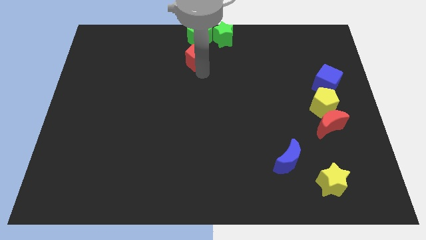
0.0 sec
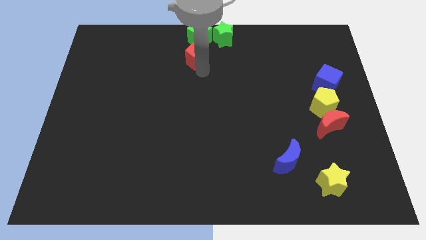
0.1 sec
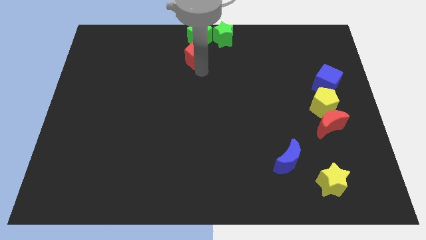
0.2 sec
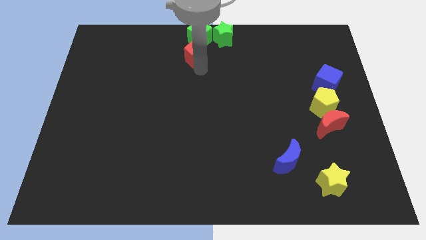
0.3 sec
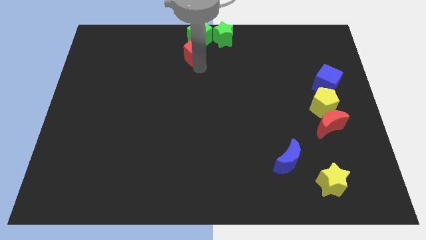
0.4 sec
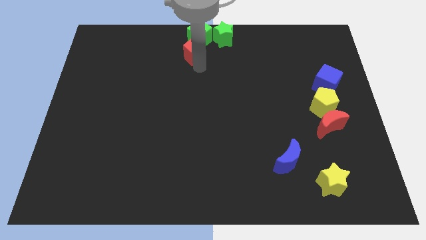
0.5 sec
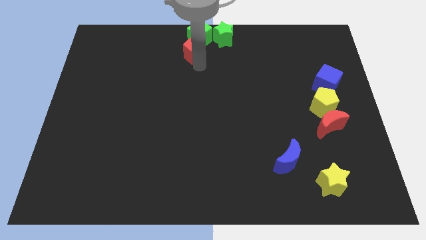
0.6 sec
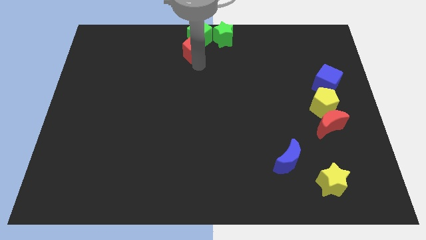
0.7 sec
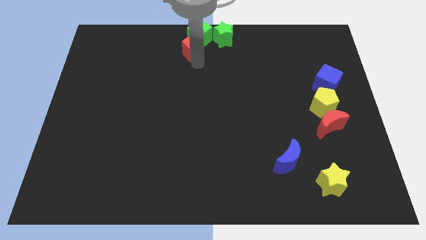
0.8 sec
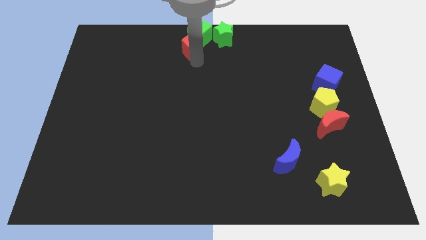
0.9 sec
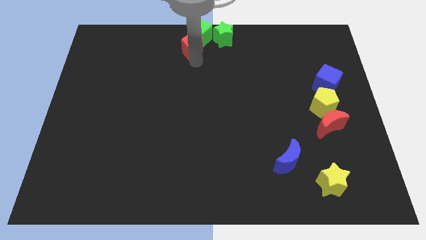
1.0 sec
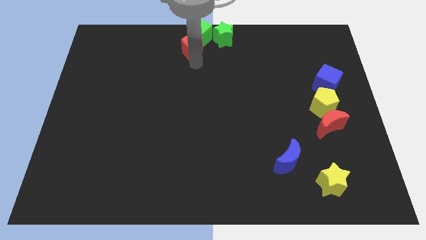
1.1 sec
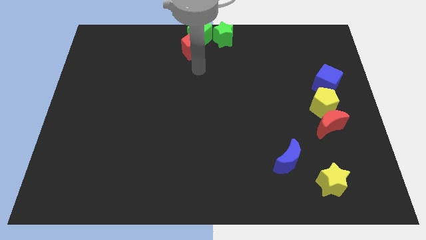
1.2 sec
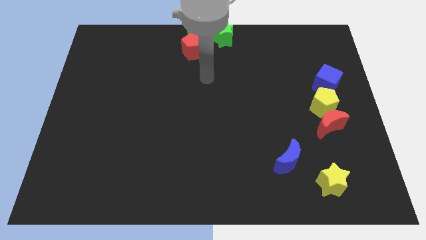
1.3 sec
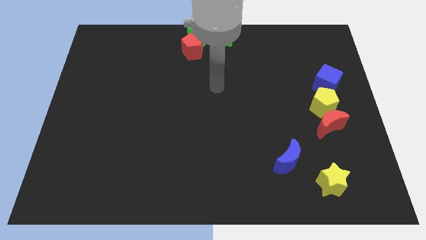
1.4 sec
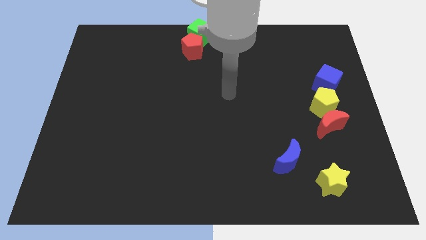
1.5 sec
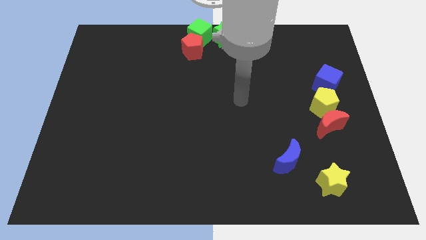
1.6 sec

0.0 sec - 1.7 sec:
place red pentagon below the green cube

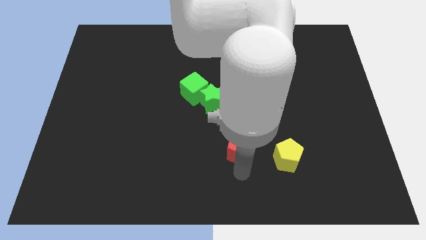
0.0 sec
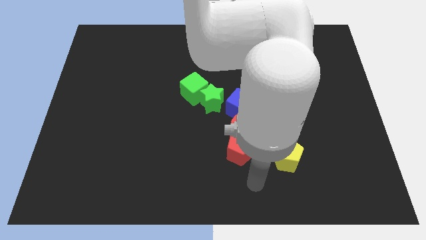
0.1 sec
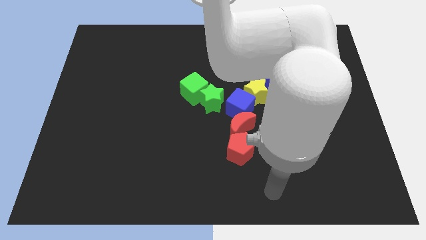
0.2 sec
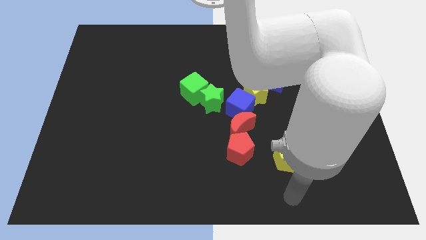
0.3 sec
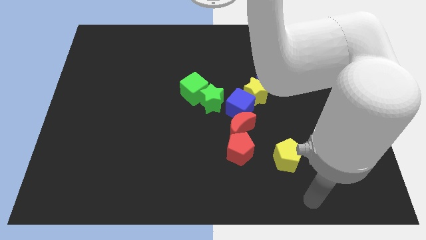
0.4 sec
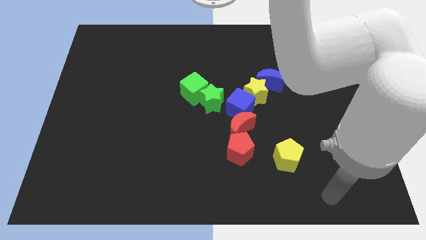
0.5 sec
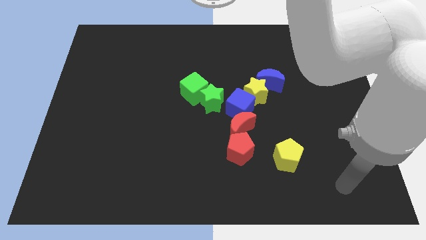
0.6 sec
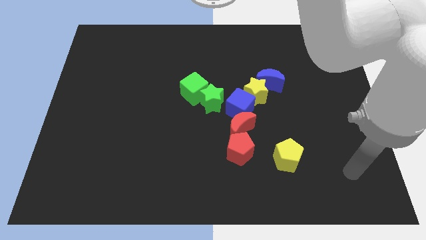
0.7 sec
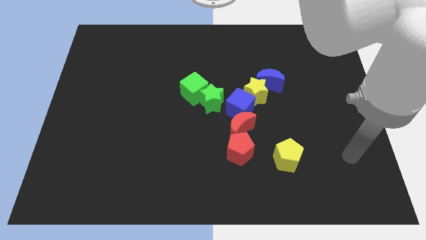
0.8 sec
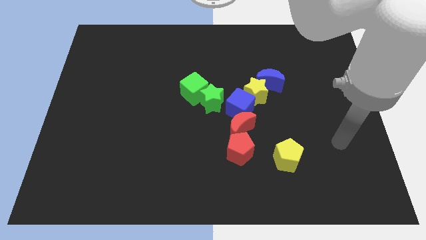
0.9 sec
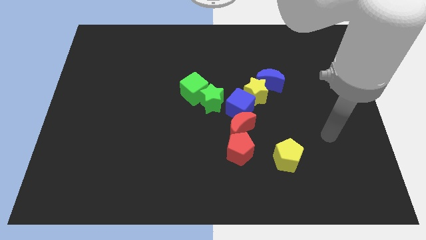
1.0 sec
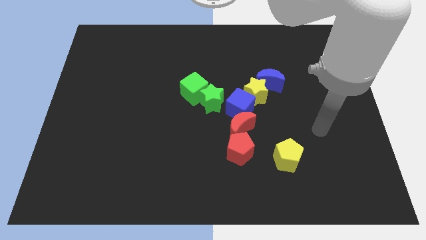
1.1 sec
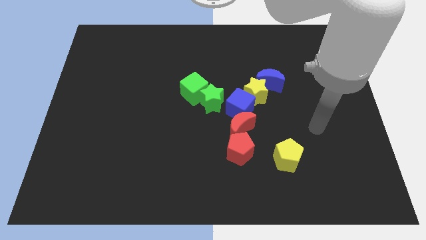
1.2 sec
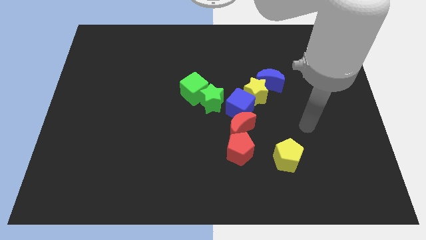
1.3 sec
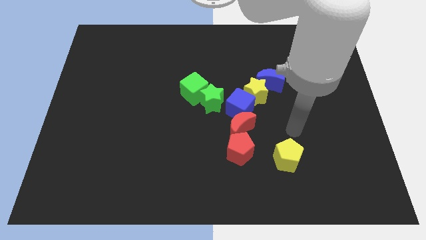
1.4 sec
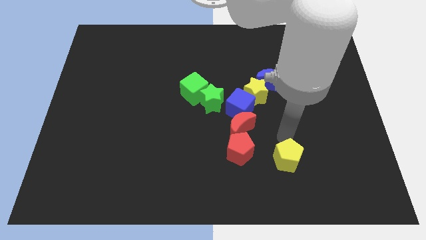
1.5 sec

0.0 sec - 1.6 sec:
move the arm towards the top of the yellow pentagon

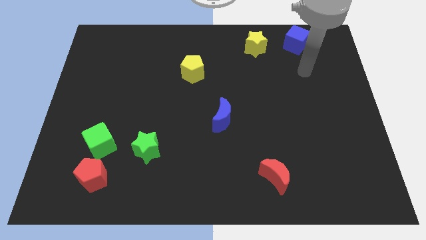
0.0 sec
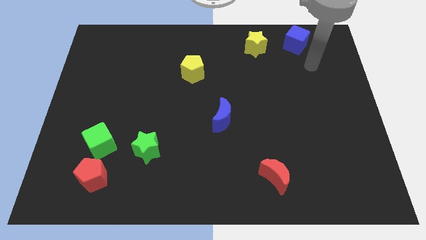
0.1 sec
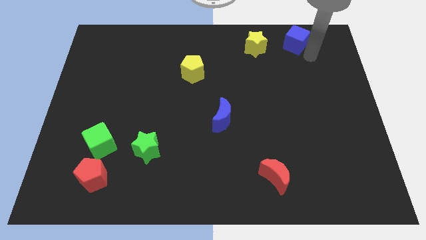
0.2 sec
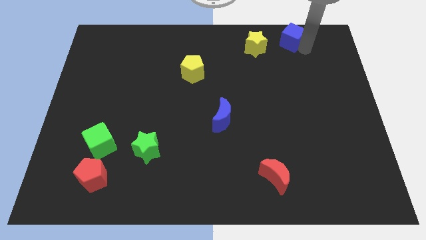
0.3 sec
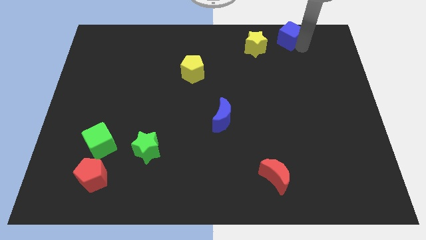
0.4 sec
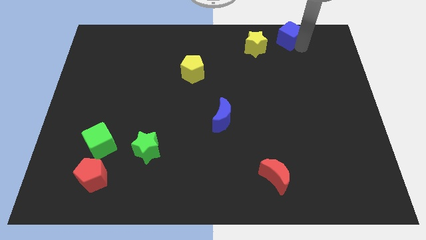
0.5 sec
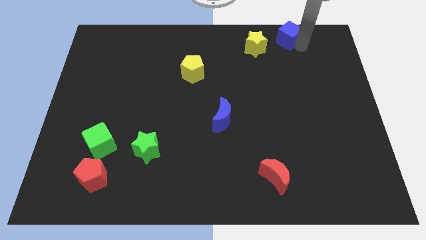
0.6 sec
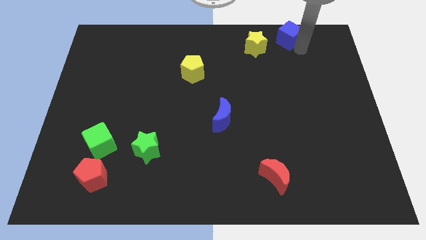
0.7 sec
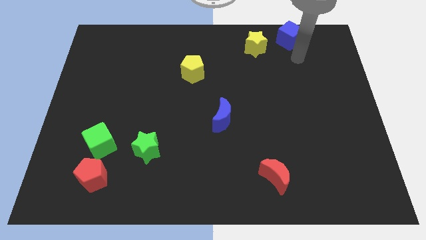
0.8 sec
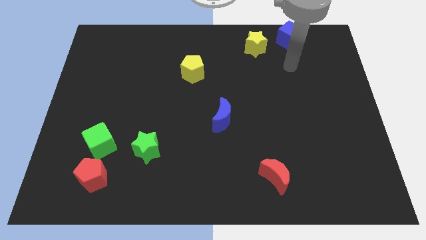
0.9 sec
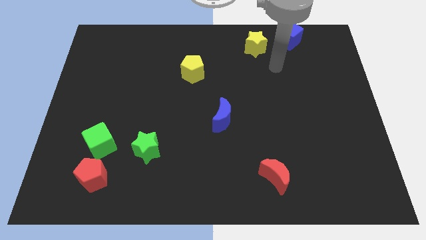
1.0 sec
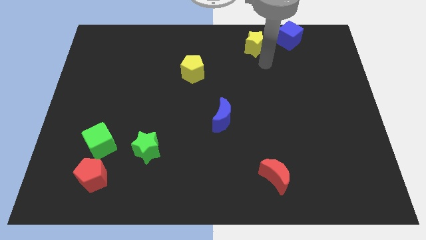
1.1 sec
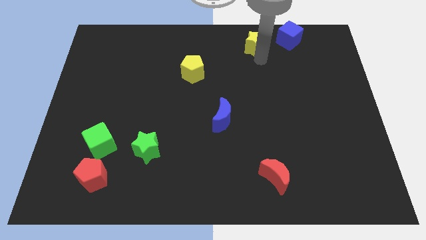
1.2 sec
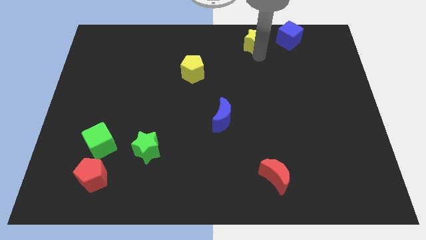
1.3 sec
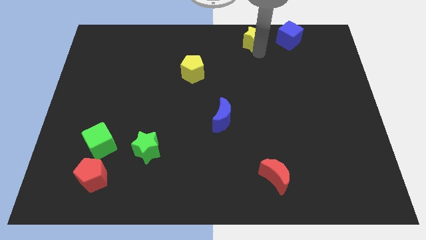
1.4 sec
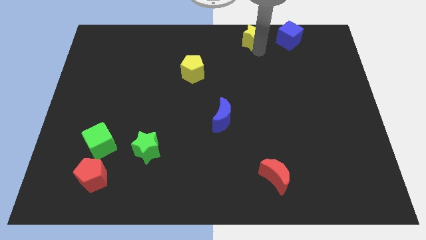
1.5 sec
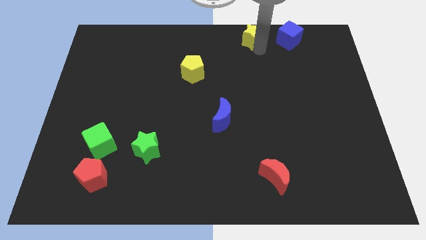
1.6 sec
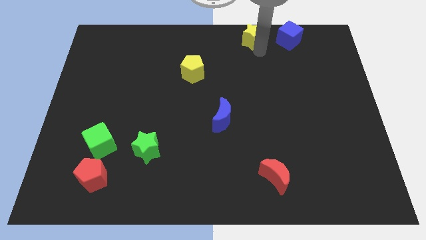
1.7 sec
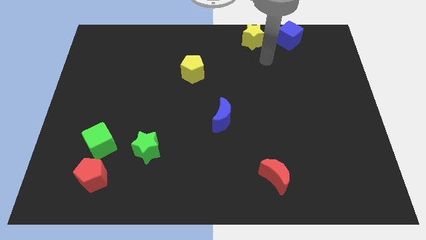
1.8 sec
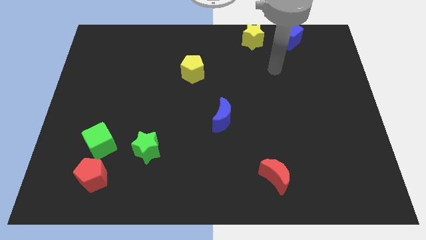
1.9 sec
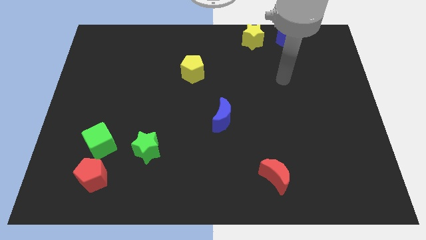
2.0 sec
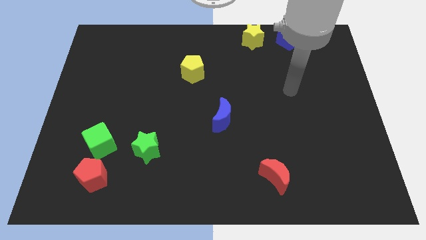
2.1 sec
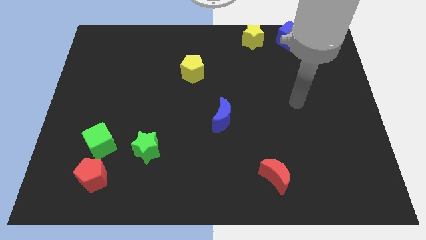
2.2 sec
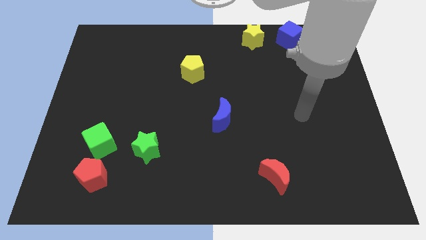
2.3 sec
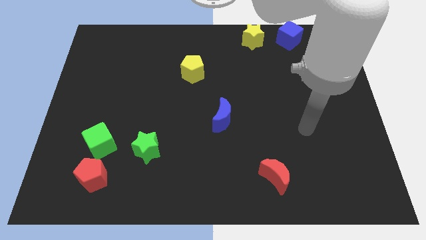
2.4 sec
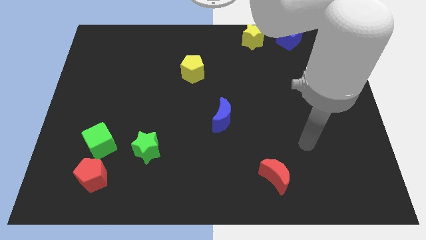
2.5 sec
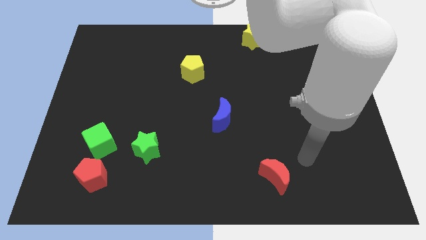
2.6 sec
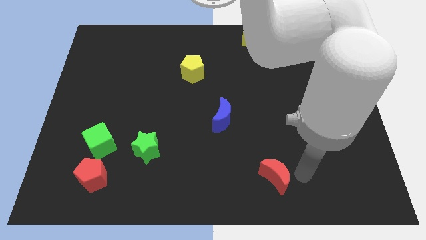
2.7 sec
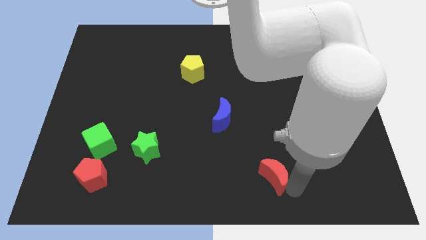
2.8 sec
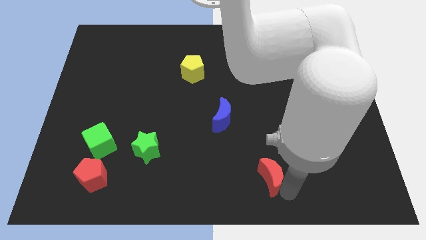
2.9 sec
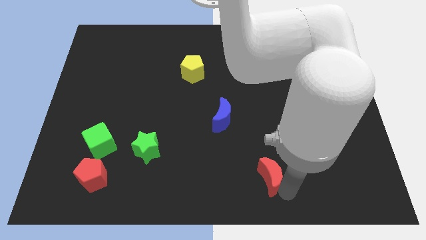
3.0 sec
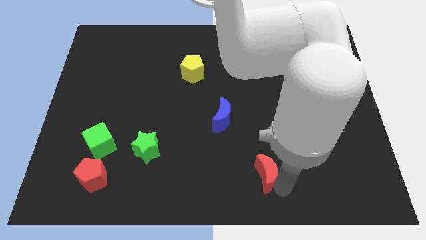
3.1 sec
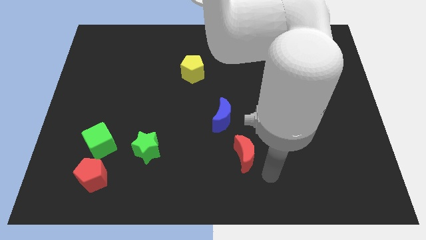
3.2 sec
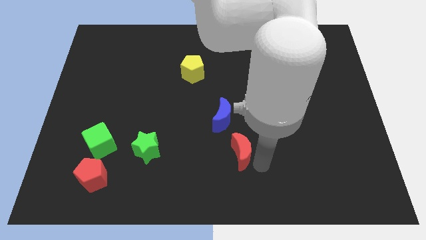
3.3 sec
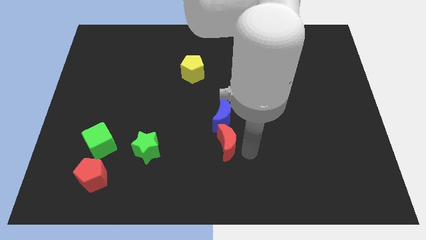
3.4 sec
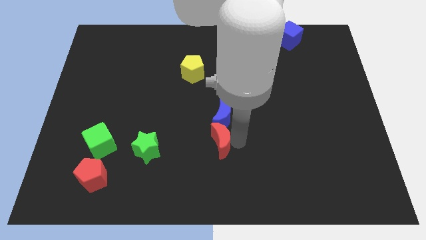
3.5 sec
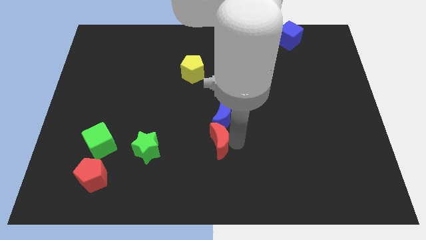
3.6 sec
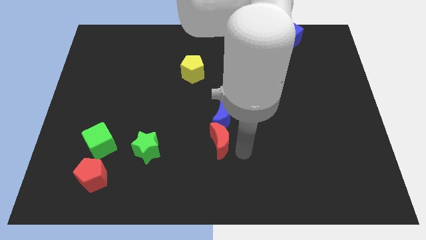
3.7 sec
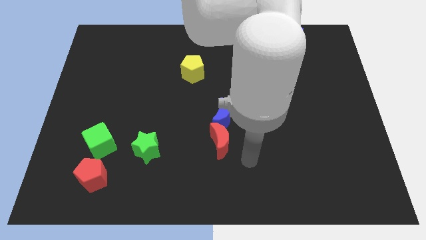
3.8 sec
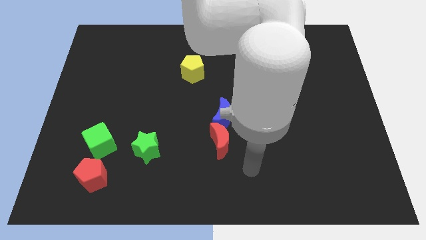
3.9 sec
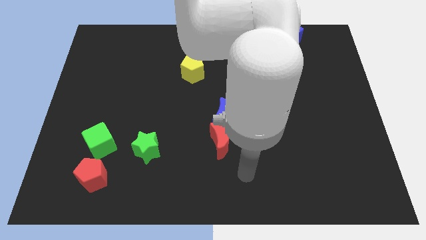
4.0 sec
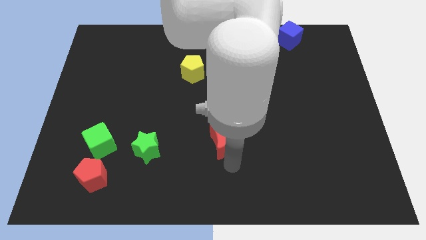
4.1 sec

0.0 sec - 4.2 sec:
place the yellow star parallel left to the blue cube

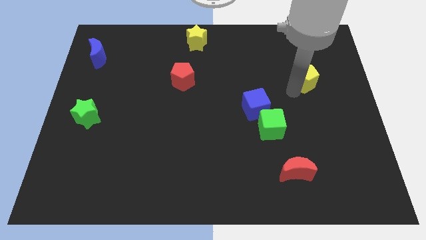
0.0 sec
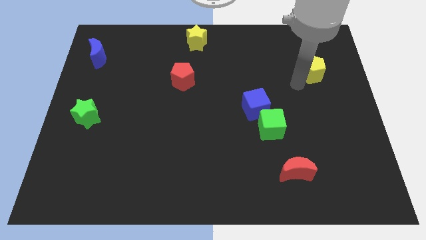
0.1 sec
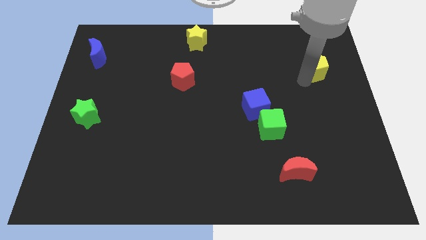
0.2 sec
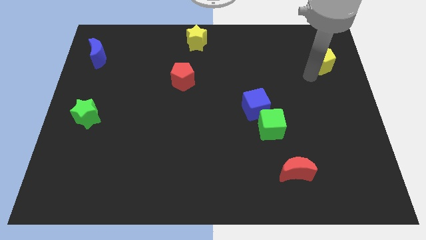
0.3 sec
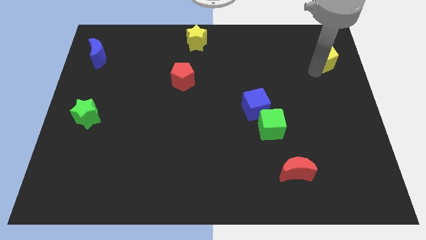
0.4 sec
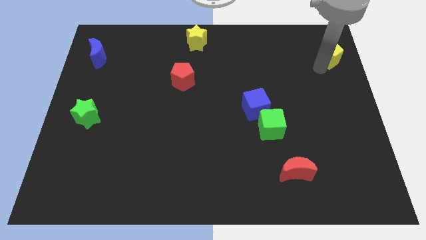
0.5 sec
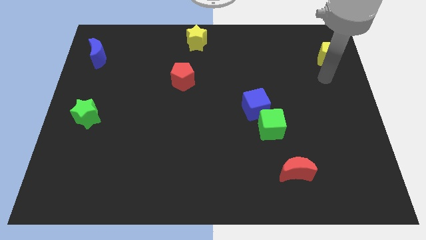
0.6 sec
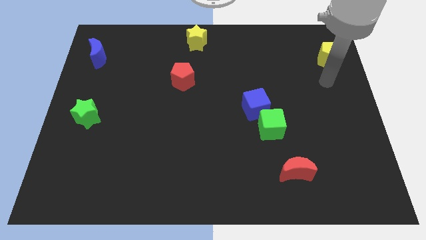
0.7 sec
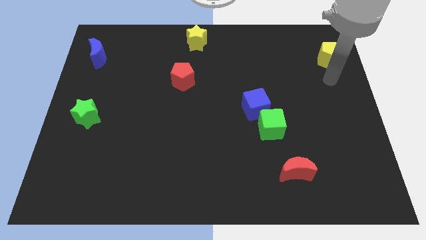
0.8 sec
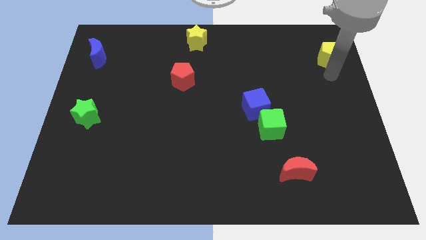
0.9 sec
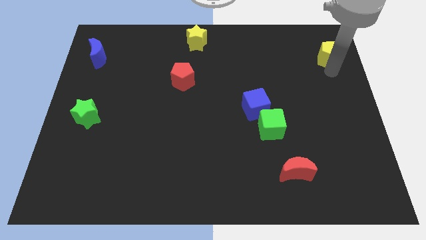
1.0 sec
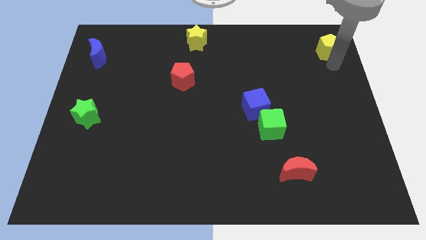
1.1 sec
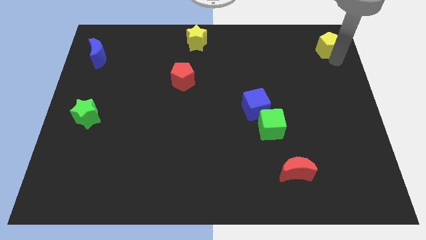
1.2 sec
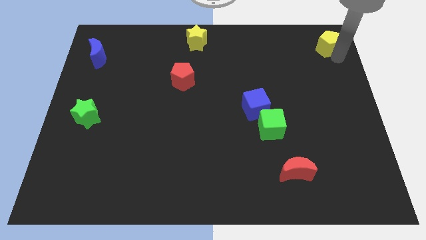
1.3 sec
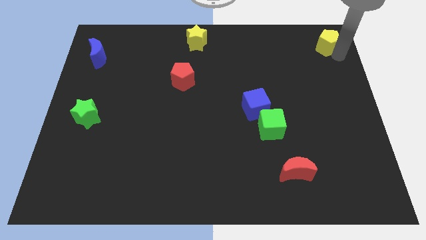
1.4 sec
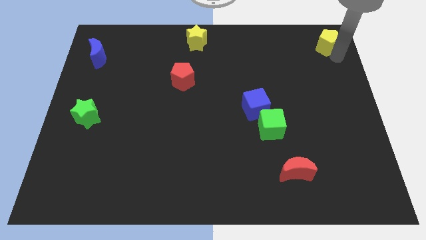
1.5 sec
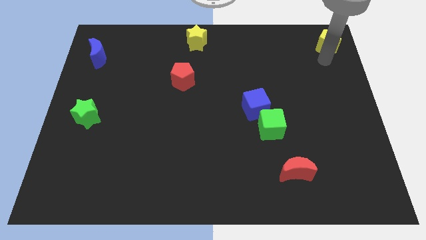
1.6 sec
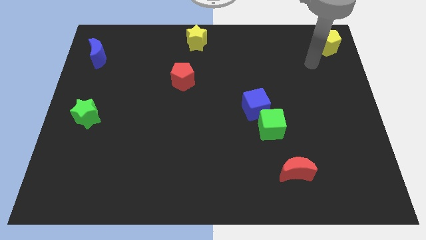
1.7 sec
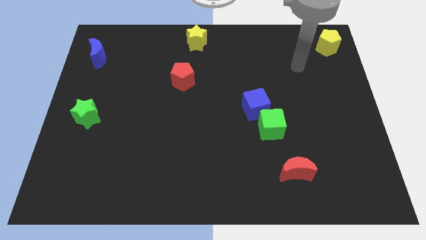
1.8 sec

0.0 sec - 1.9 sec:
place the yellow pentagon to the top right corner of the board
